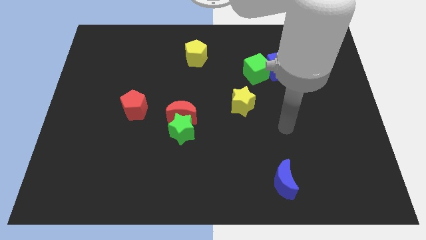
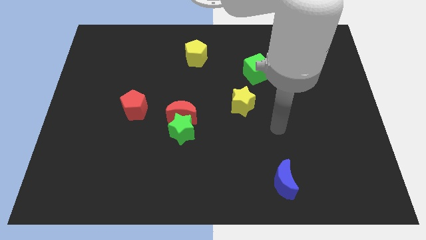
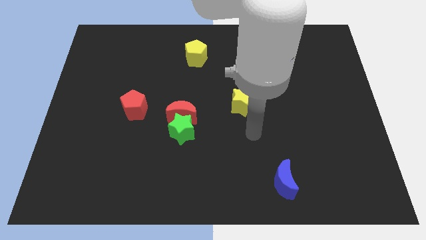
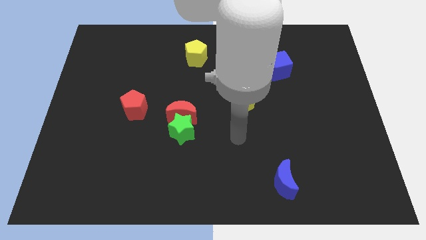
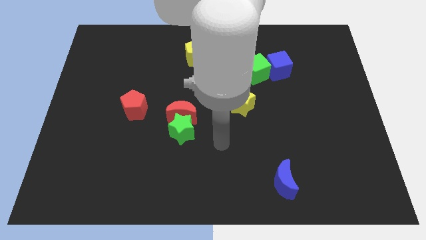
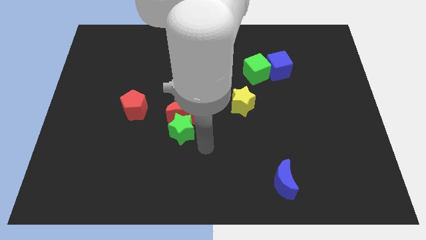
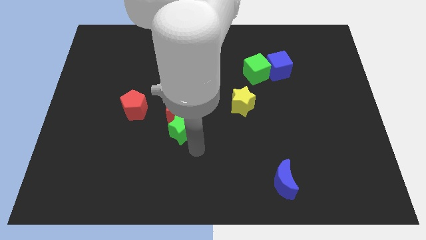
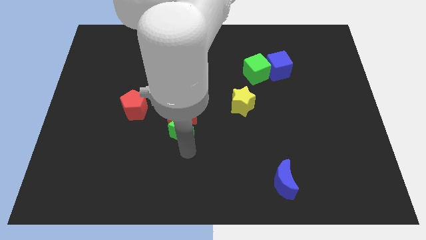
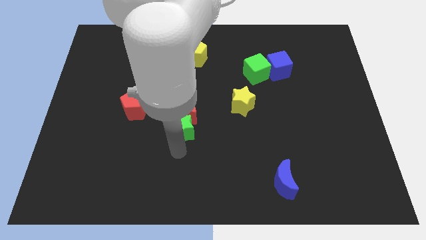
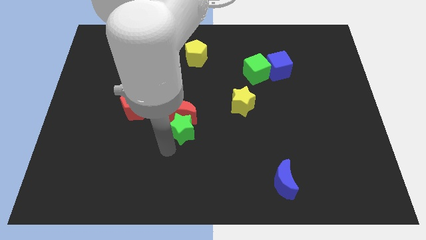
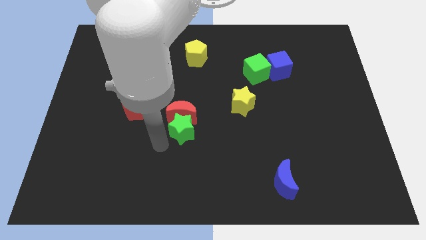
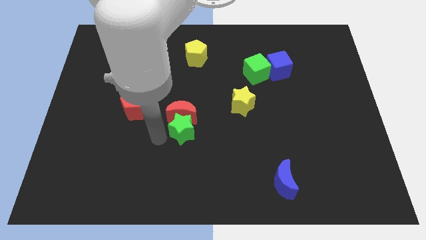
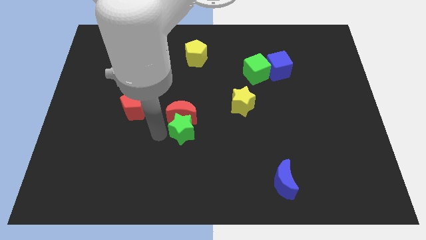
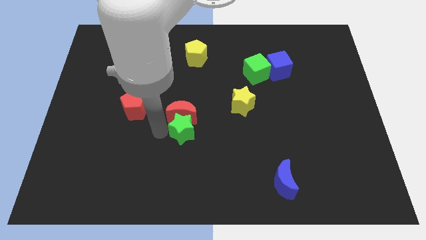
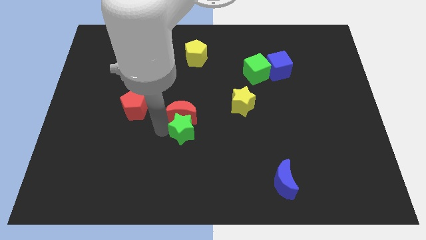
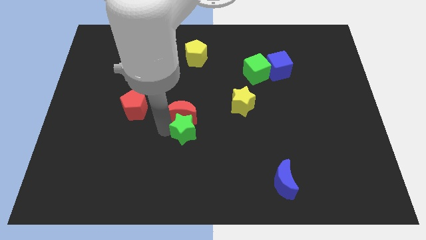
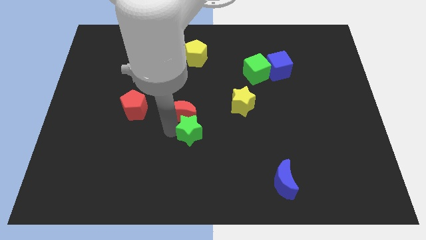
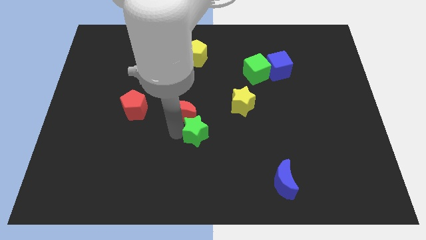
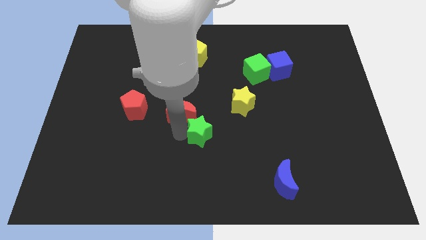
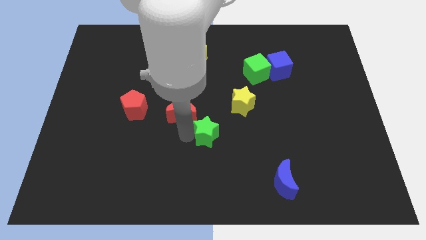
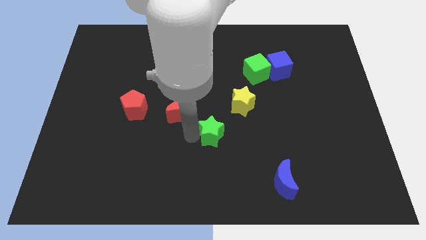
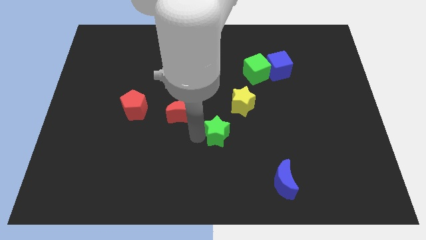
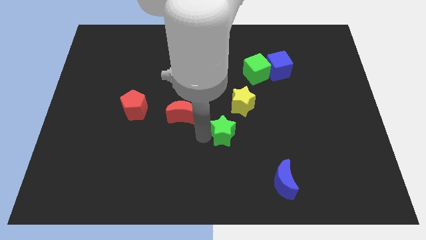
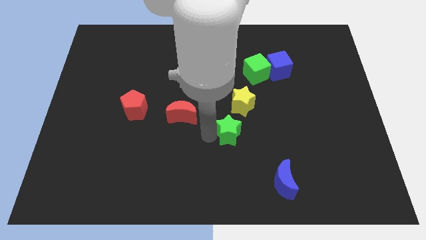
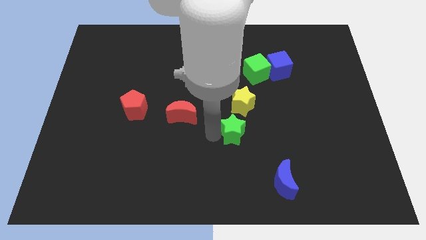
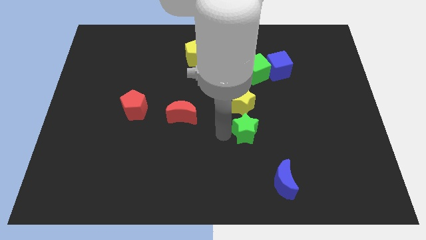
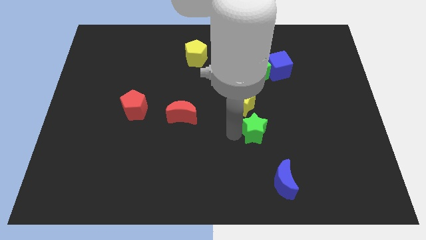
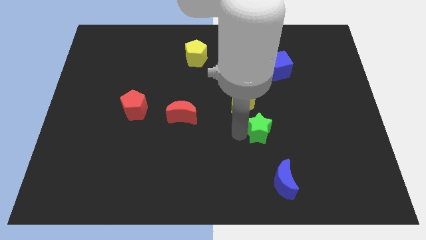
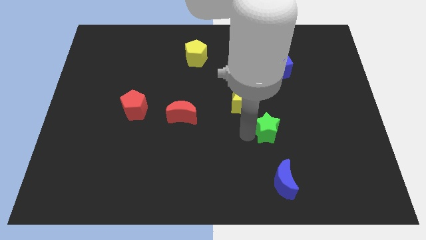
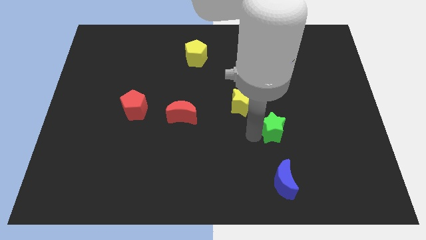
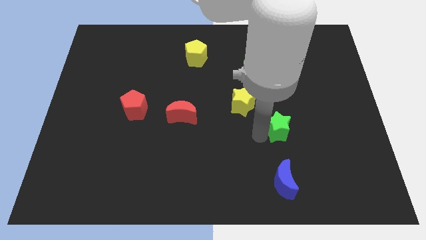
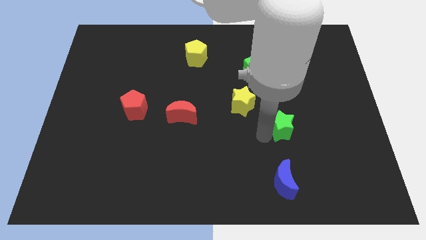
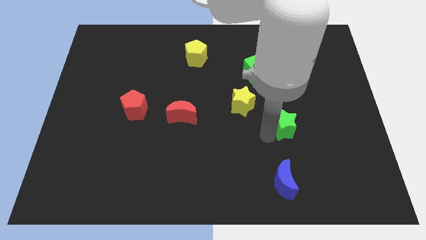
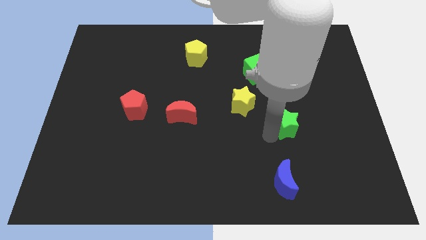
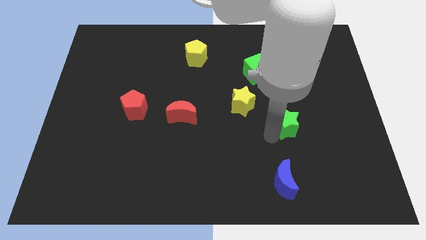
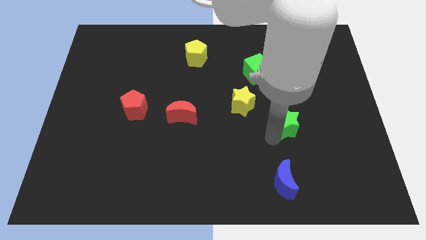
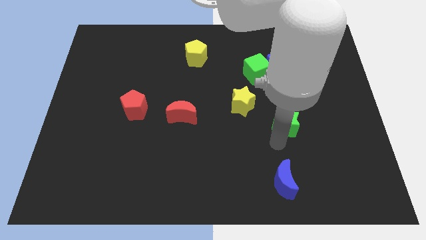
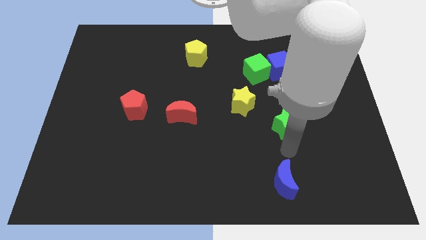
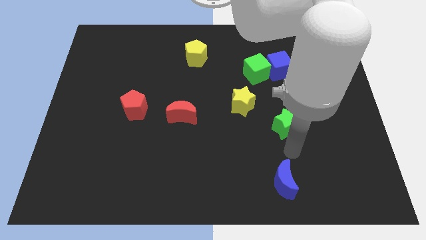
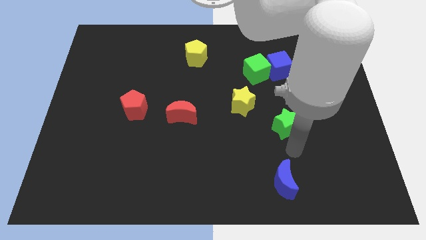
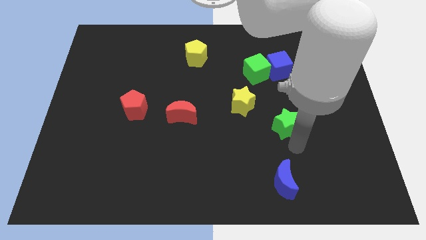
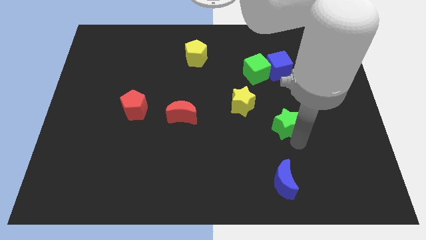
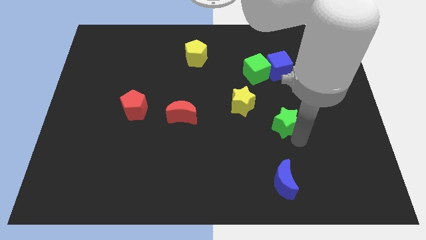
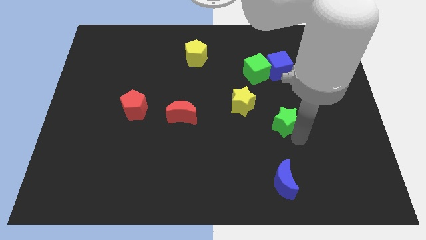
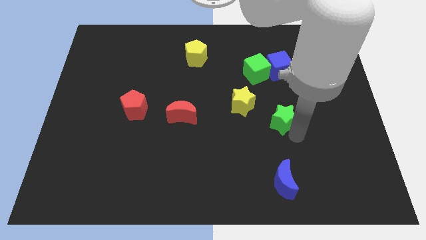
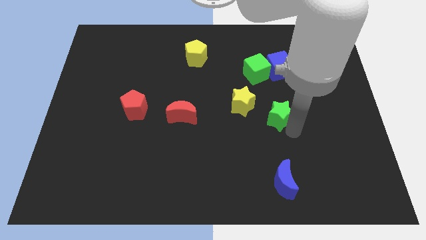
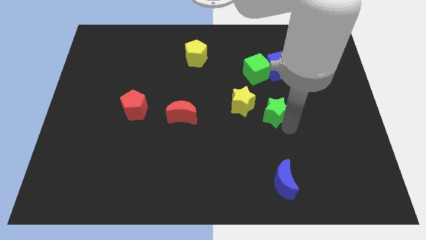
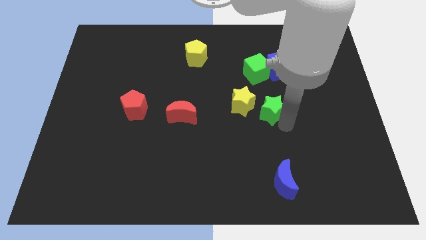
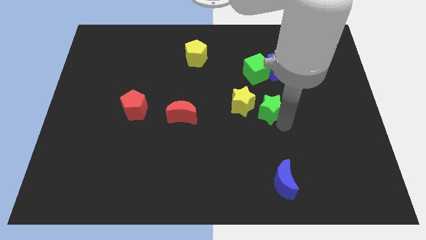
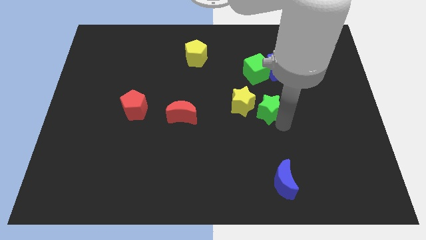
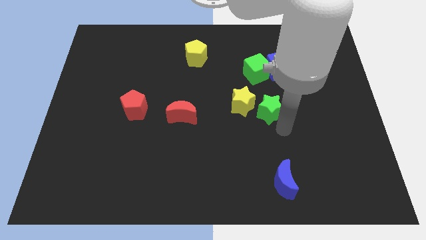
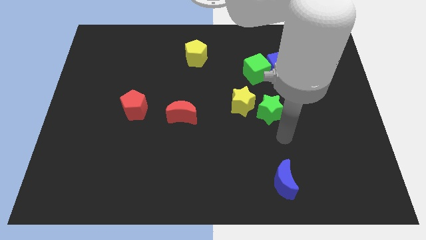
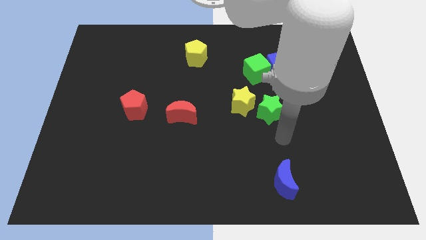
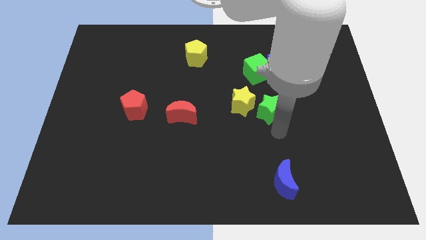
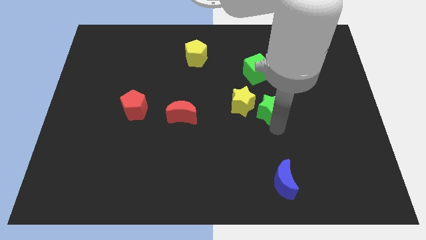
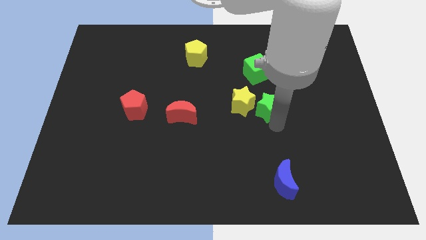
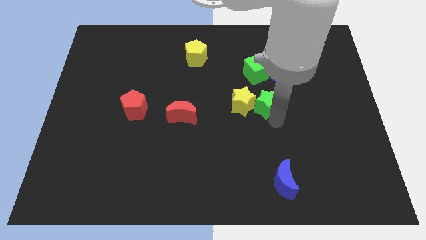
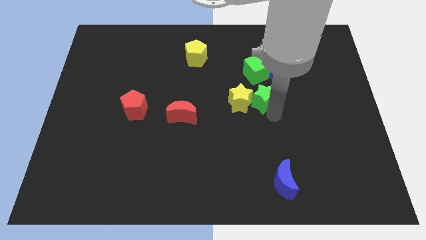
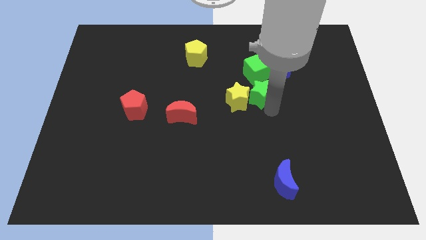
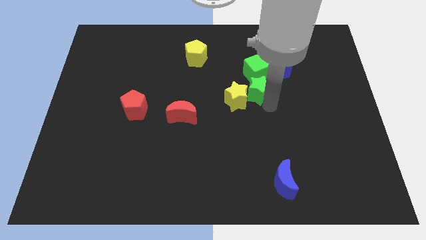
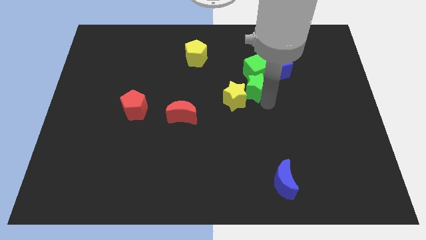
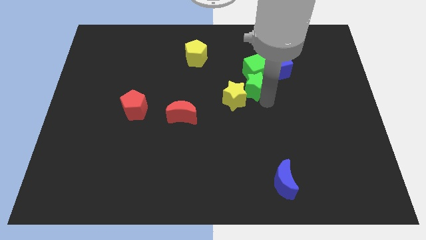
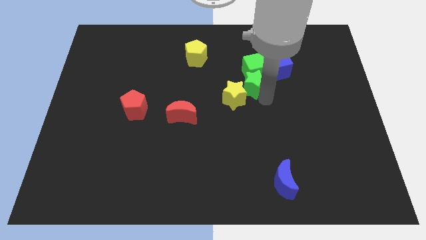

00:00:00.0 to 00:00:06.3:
put the green star towards the green cube

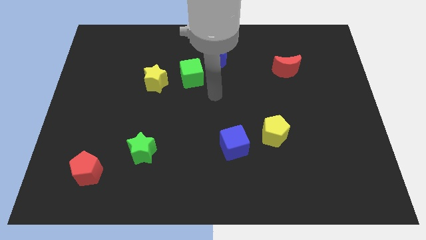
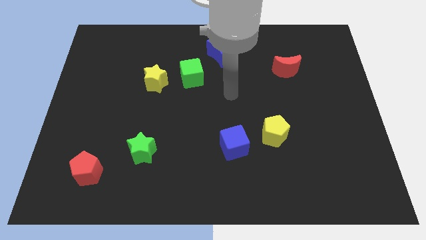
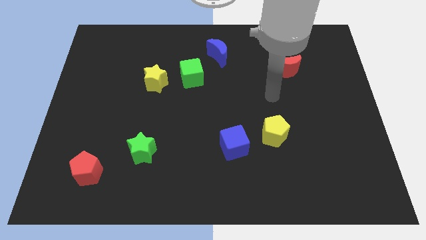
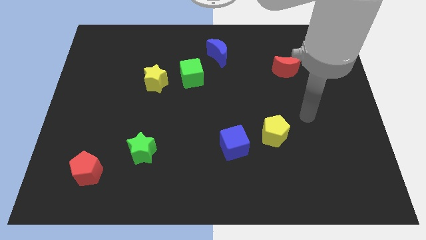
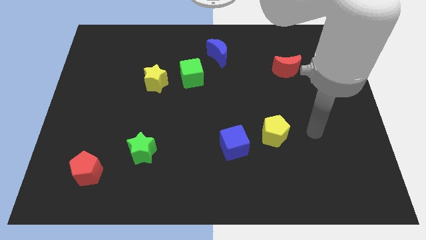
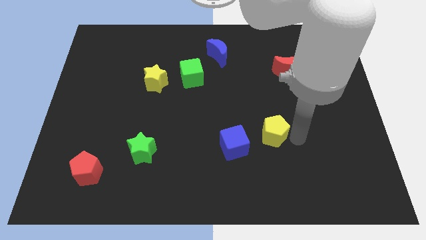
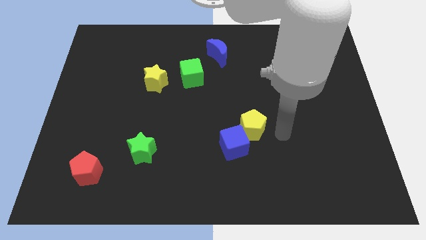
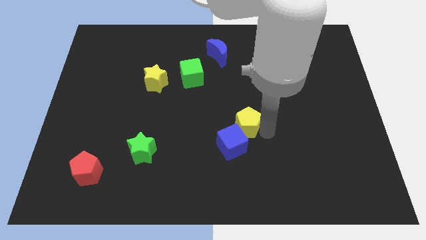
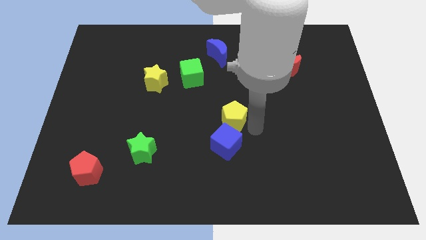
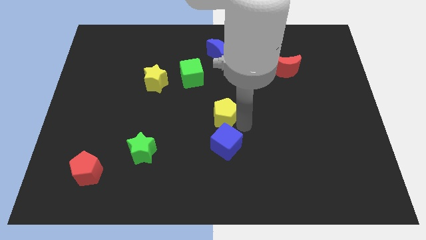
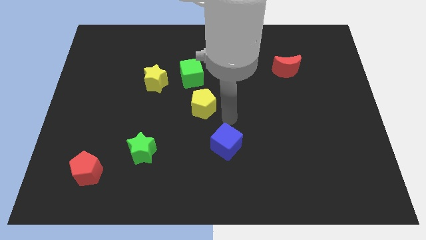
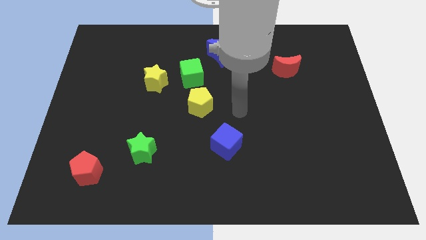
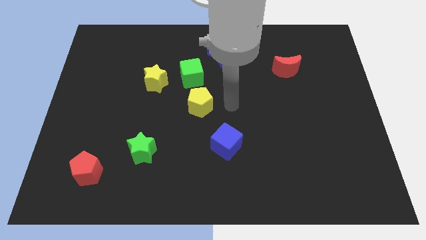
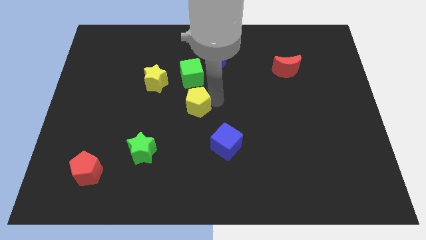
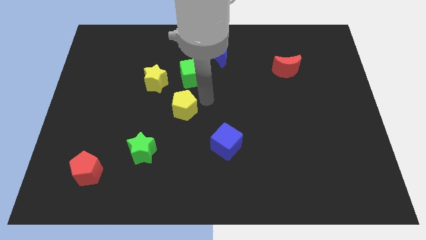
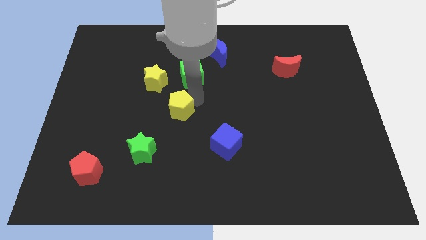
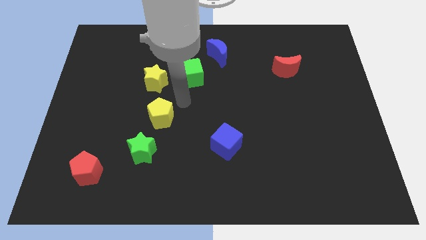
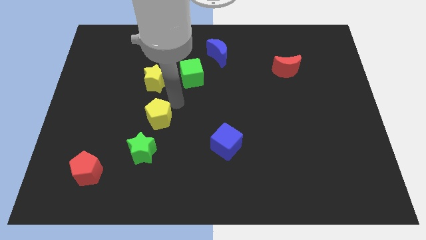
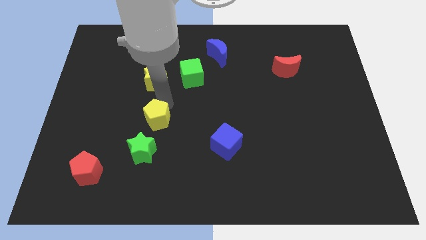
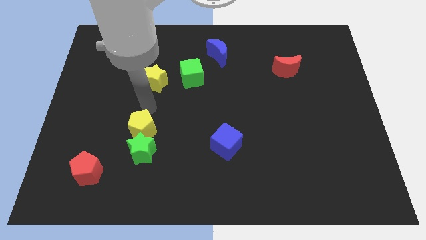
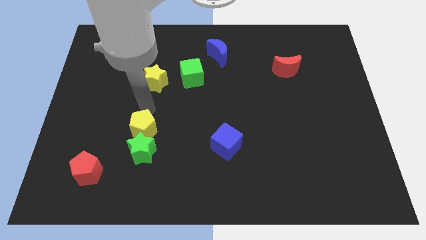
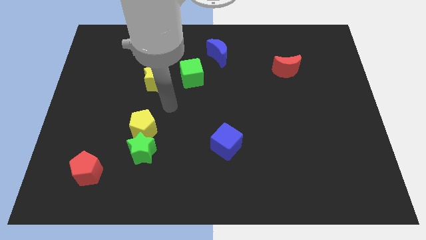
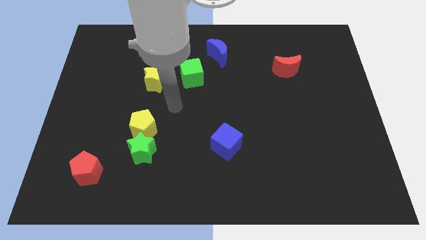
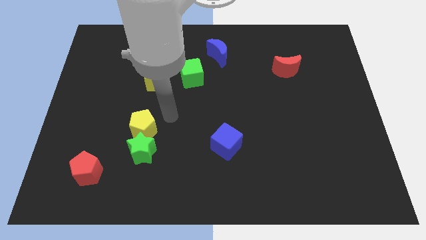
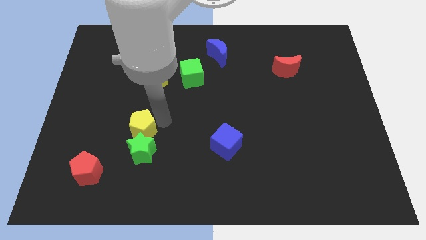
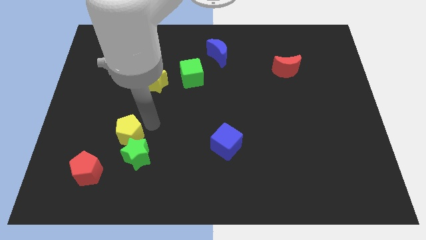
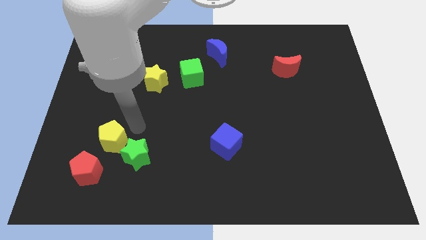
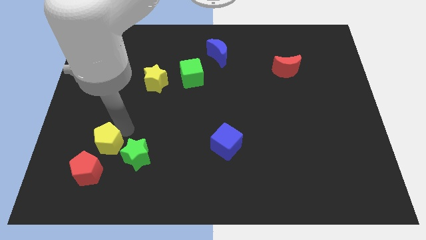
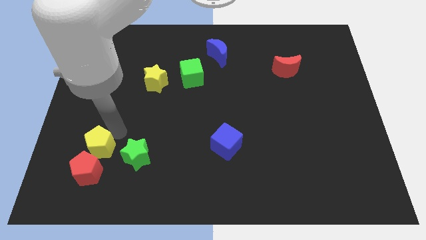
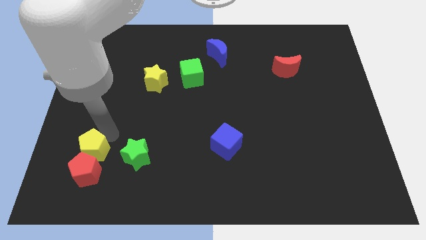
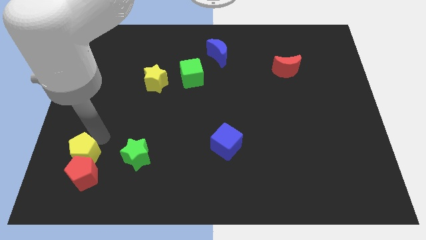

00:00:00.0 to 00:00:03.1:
move the yellow pentagon to the red pentagon
